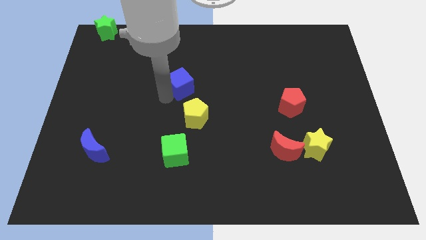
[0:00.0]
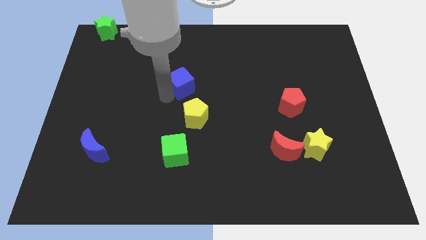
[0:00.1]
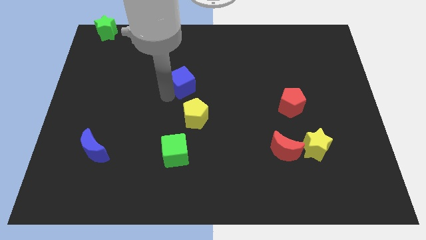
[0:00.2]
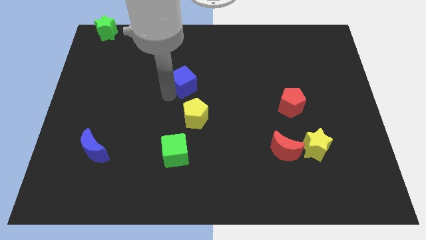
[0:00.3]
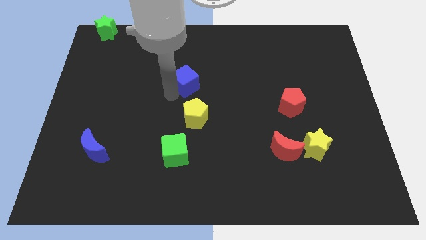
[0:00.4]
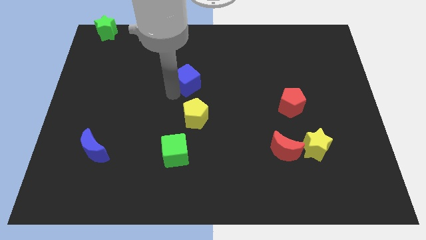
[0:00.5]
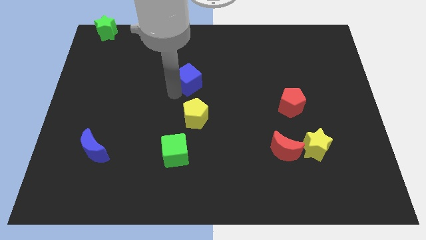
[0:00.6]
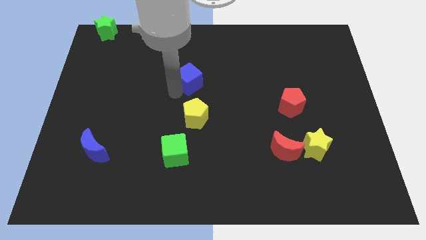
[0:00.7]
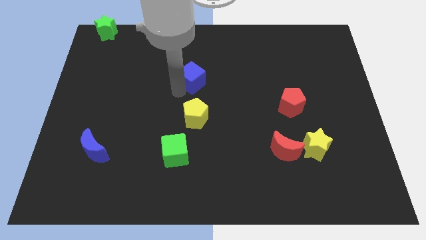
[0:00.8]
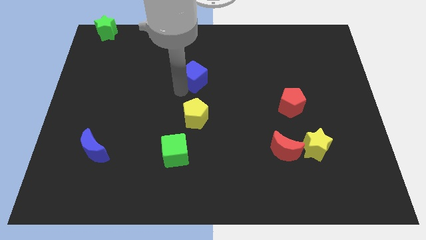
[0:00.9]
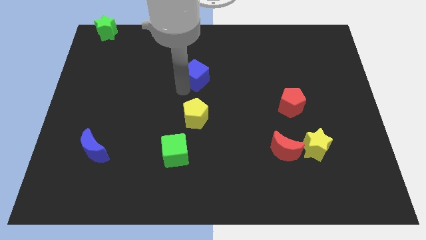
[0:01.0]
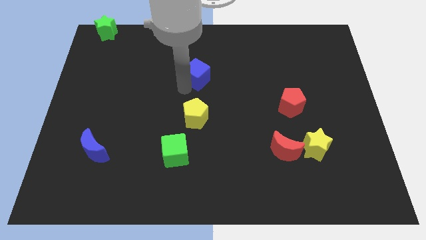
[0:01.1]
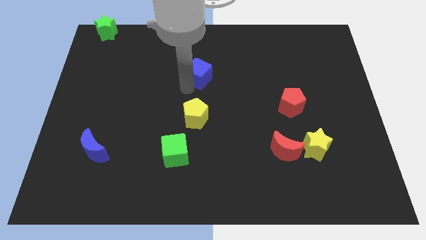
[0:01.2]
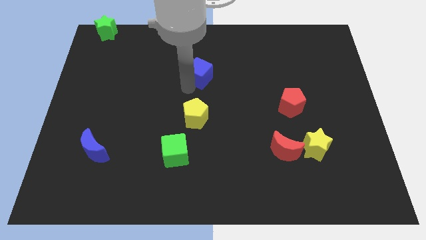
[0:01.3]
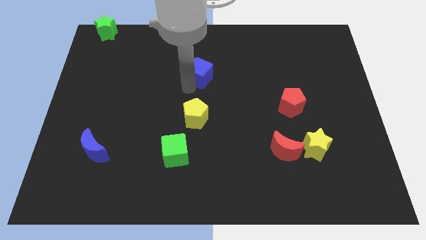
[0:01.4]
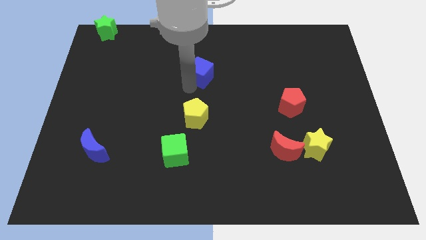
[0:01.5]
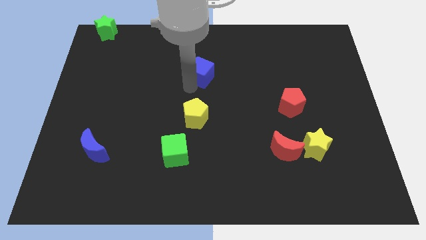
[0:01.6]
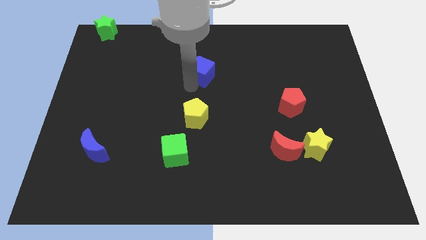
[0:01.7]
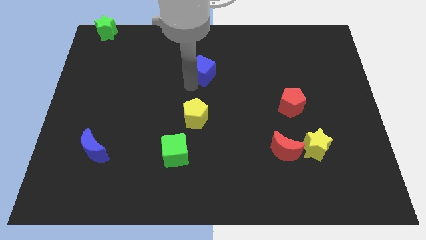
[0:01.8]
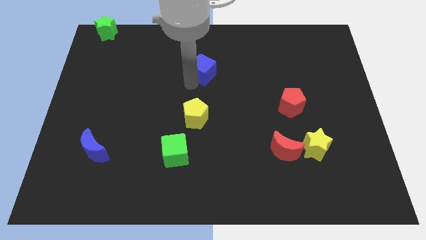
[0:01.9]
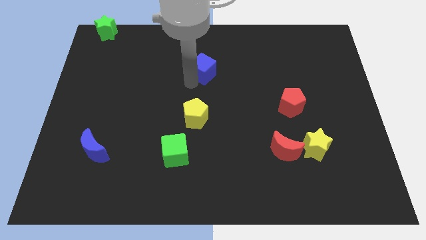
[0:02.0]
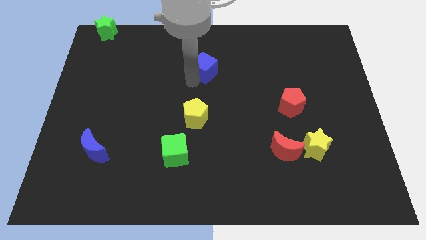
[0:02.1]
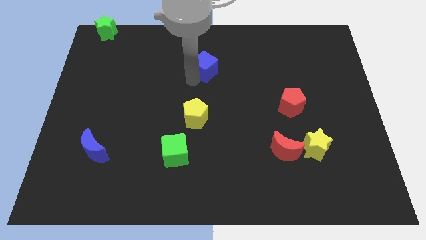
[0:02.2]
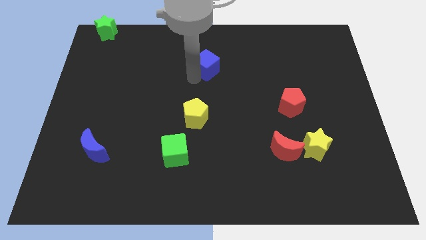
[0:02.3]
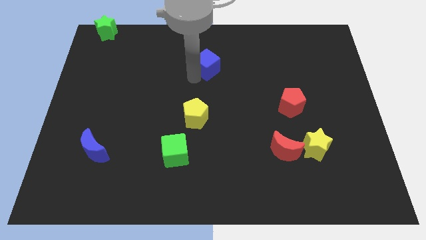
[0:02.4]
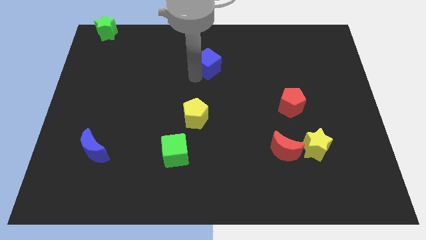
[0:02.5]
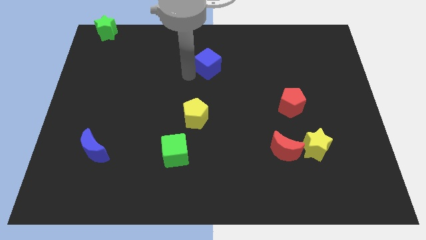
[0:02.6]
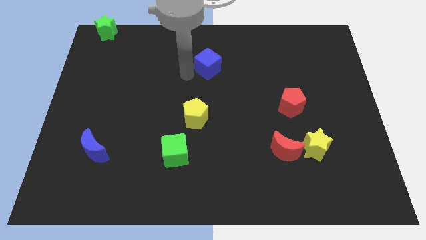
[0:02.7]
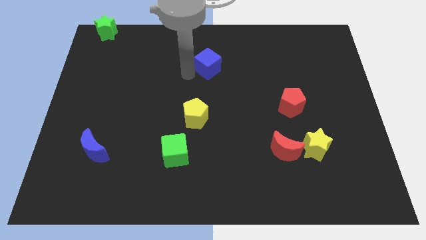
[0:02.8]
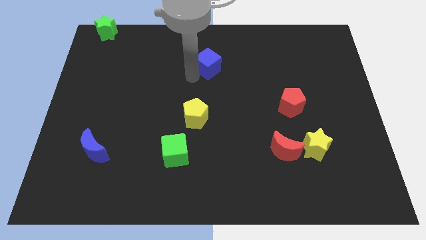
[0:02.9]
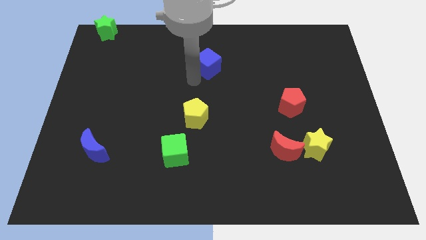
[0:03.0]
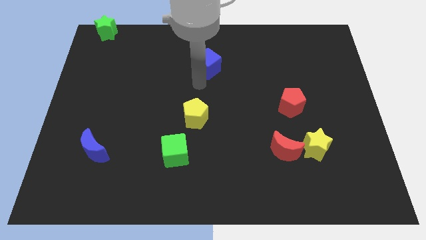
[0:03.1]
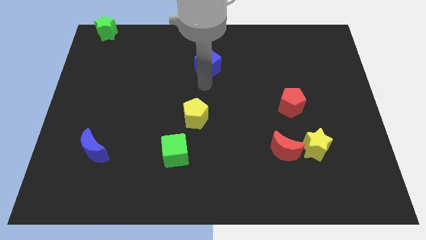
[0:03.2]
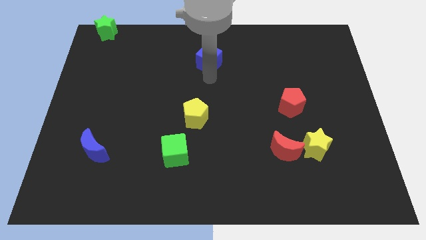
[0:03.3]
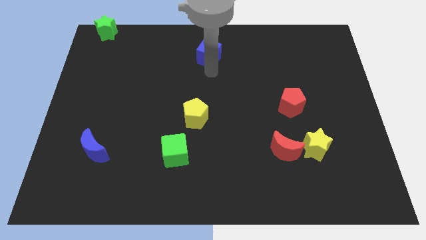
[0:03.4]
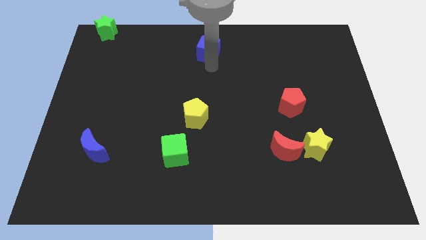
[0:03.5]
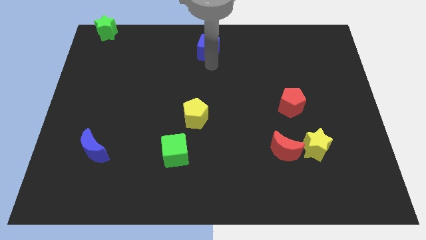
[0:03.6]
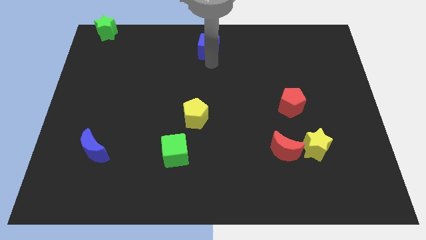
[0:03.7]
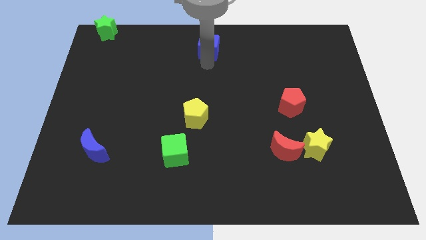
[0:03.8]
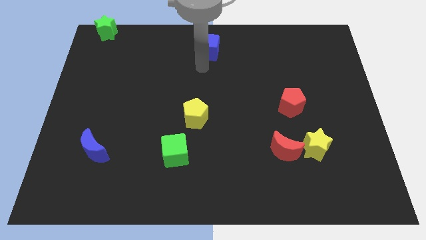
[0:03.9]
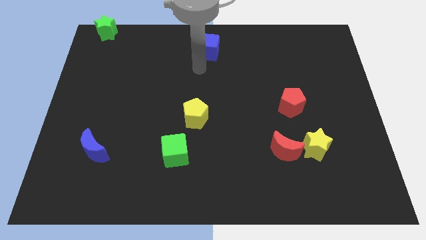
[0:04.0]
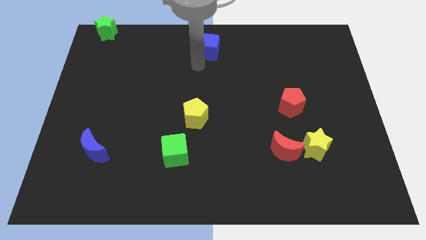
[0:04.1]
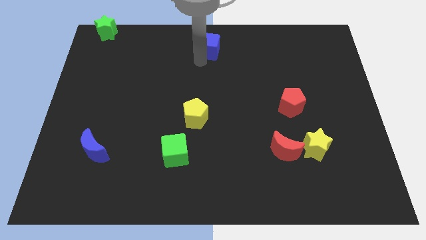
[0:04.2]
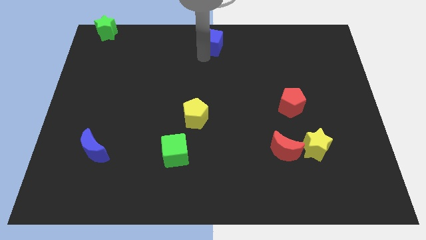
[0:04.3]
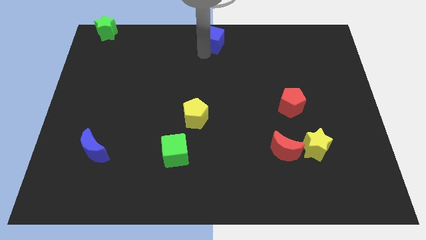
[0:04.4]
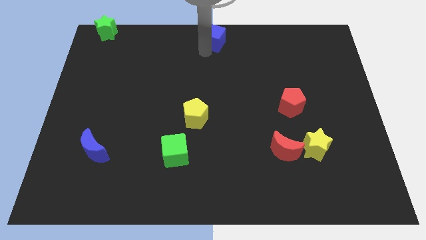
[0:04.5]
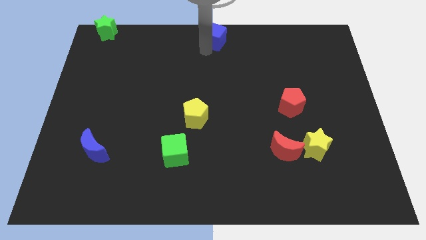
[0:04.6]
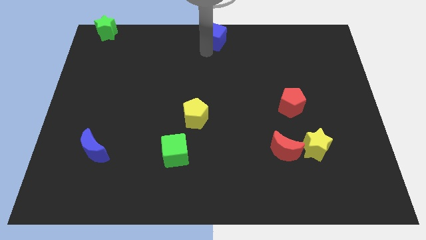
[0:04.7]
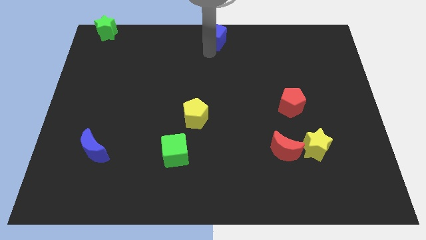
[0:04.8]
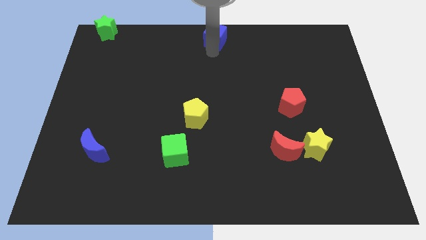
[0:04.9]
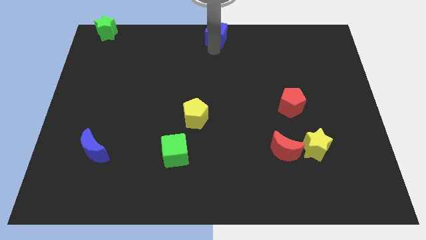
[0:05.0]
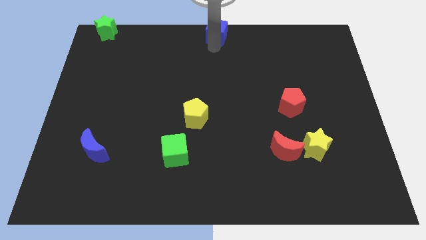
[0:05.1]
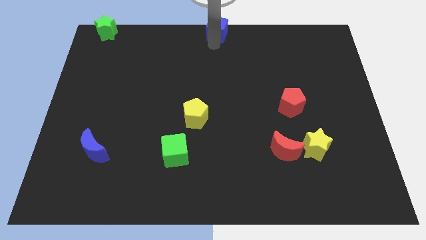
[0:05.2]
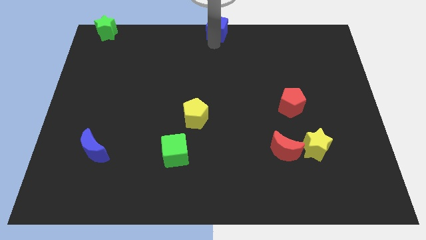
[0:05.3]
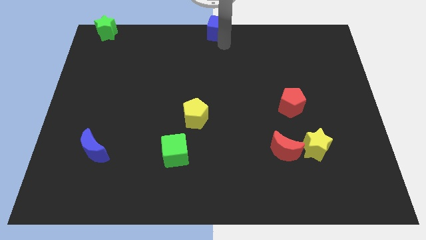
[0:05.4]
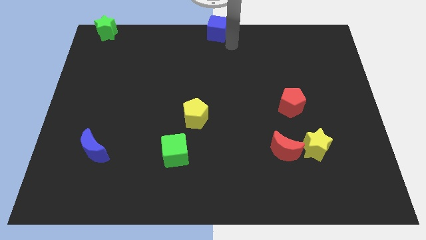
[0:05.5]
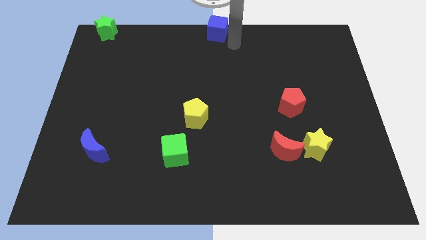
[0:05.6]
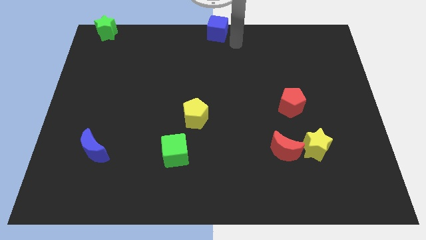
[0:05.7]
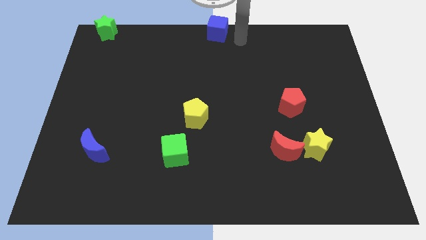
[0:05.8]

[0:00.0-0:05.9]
push the blue cube to the top center of the board

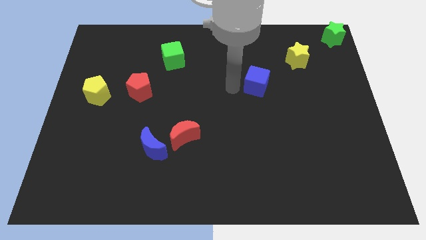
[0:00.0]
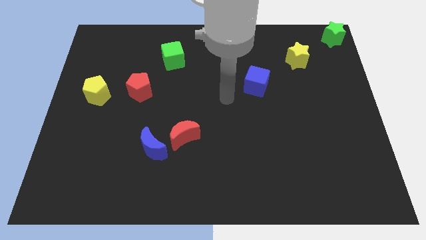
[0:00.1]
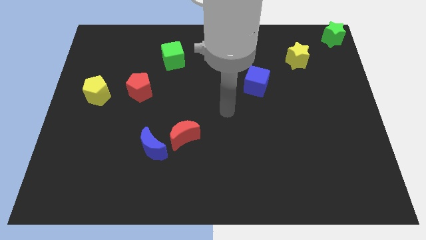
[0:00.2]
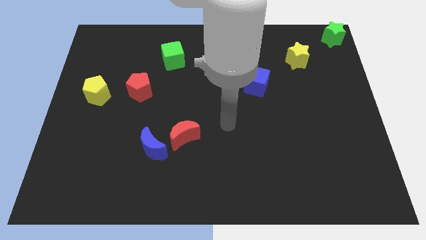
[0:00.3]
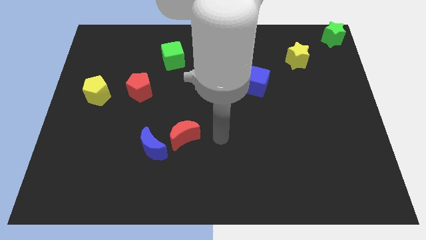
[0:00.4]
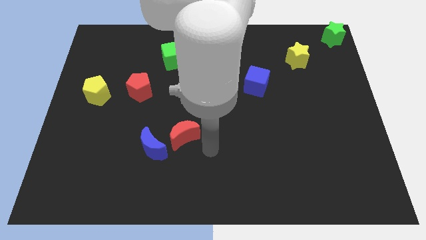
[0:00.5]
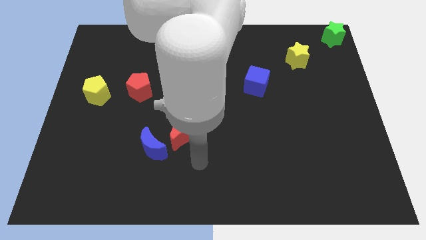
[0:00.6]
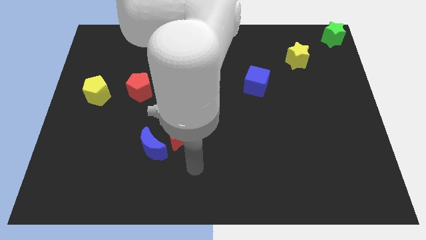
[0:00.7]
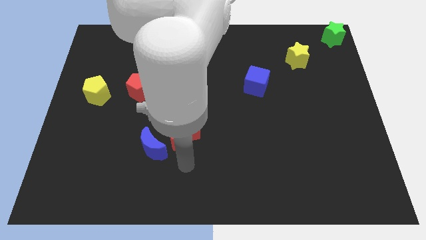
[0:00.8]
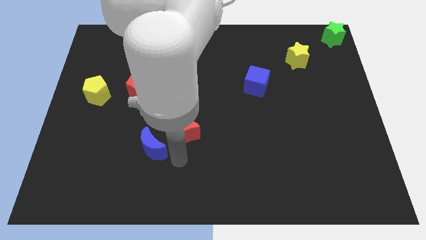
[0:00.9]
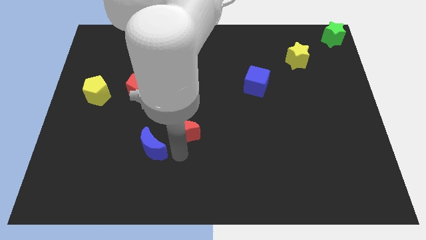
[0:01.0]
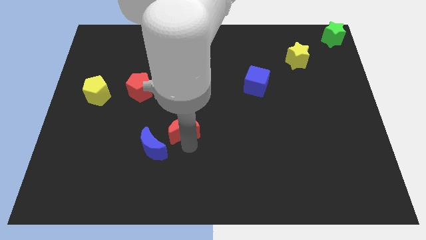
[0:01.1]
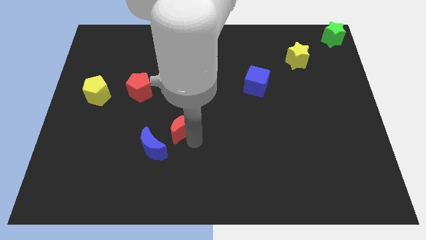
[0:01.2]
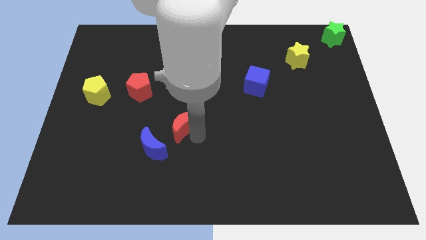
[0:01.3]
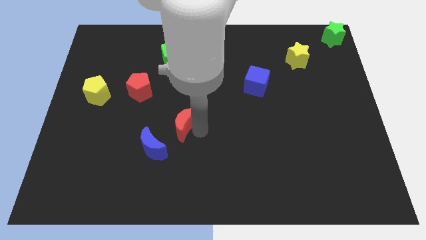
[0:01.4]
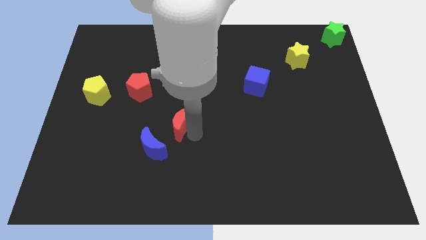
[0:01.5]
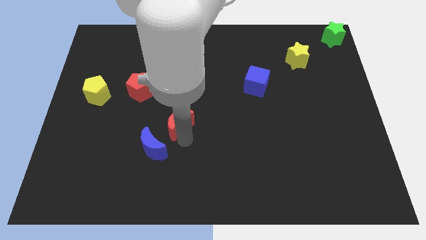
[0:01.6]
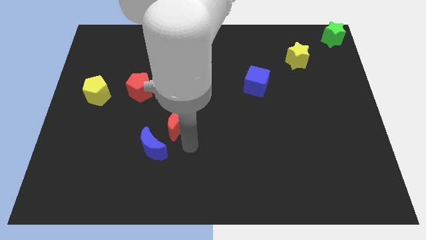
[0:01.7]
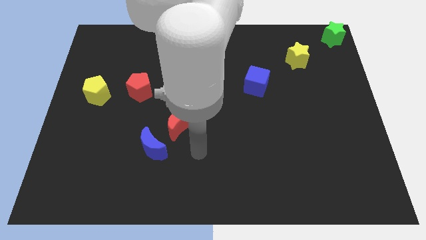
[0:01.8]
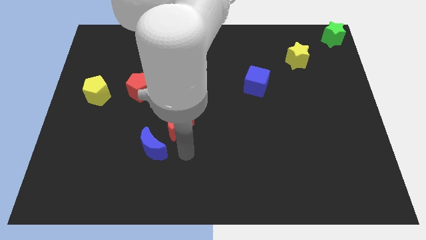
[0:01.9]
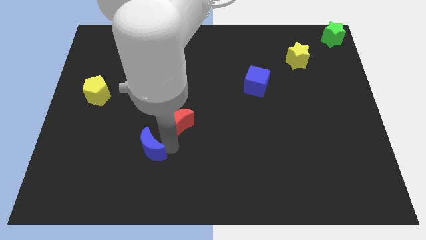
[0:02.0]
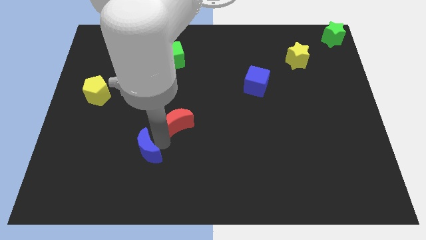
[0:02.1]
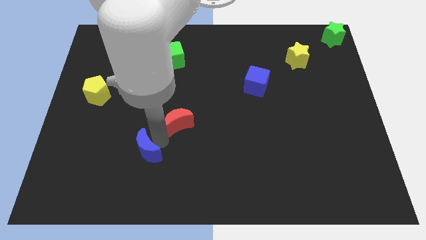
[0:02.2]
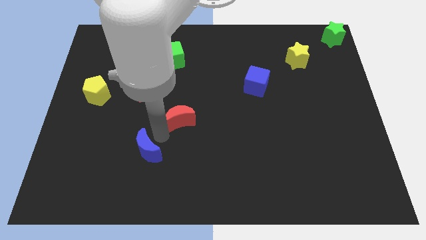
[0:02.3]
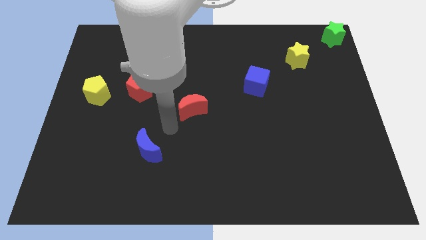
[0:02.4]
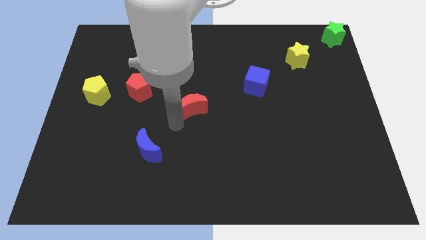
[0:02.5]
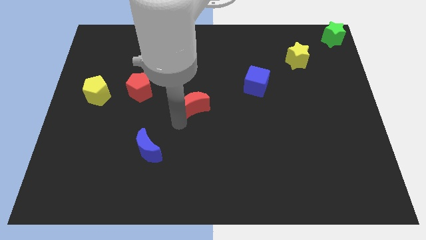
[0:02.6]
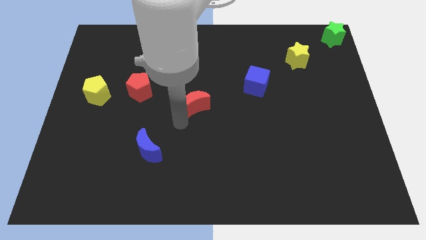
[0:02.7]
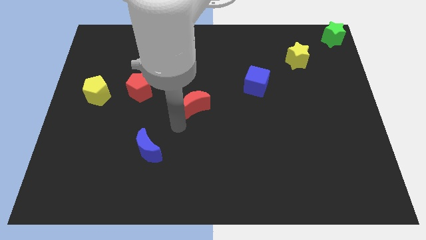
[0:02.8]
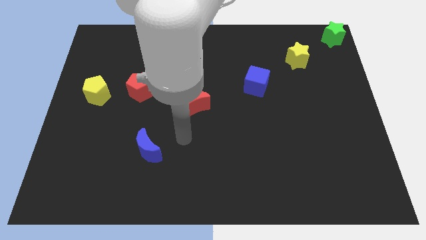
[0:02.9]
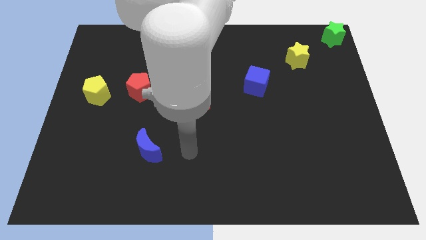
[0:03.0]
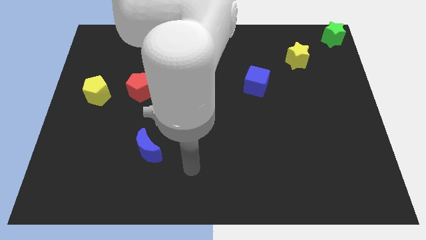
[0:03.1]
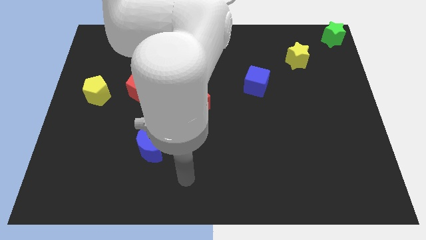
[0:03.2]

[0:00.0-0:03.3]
slide the red moon away from the blue moon
